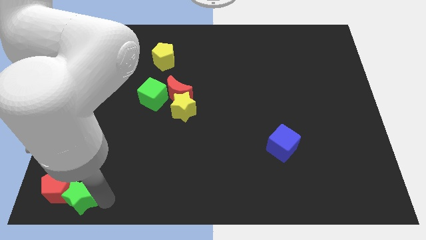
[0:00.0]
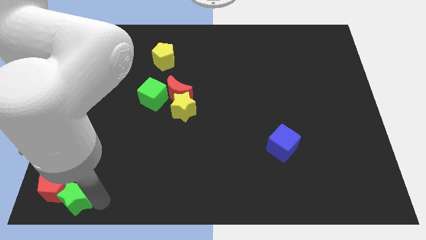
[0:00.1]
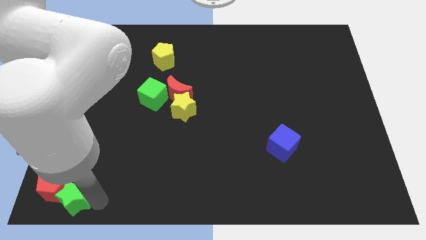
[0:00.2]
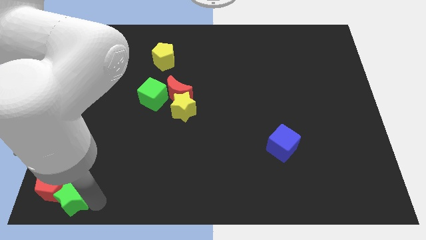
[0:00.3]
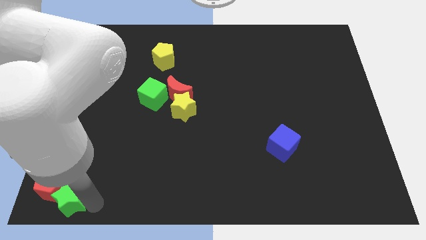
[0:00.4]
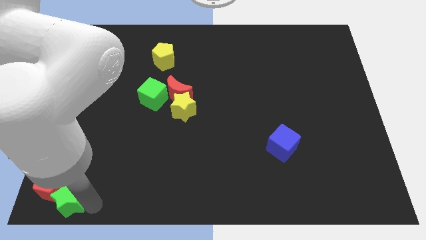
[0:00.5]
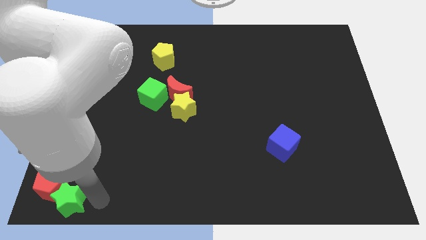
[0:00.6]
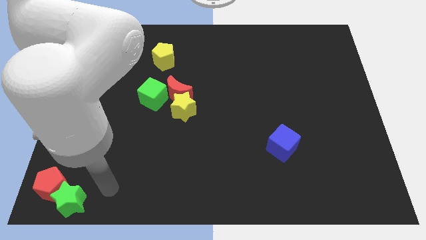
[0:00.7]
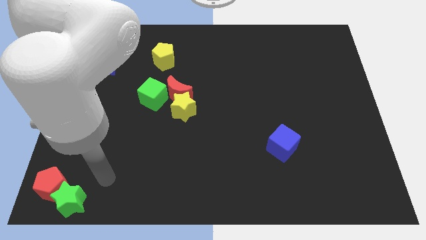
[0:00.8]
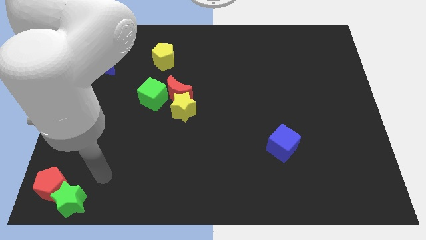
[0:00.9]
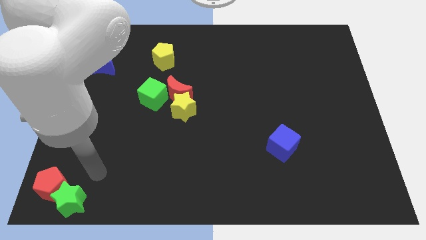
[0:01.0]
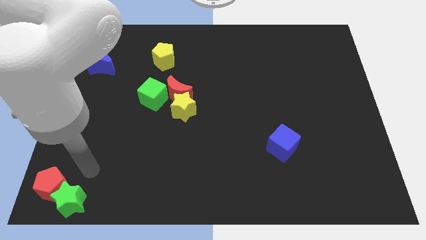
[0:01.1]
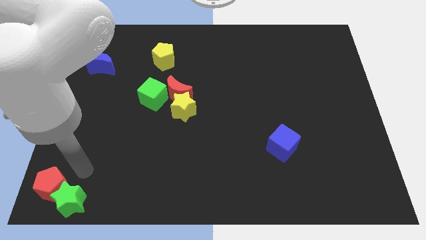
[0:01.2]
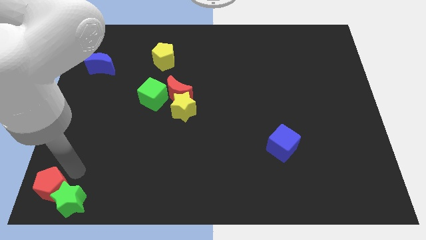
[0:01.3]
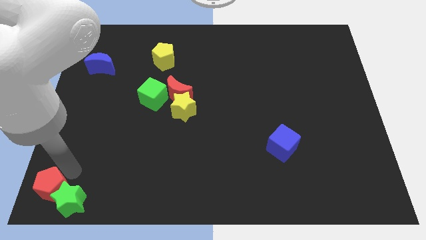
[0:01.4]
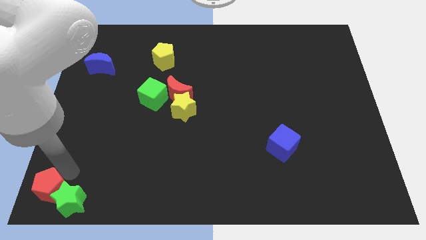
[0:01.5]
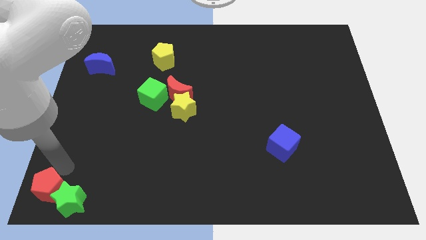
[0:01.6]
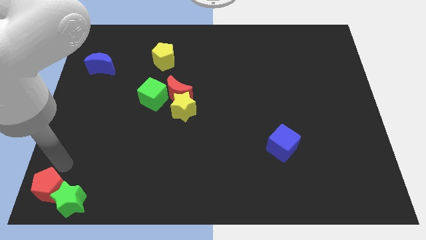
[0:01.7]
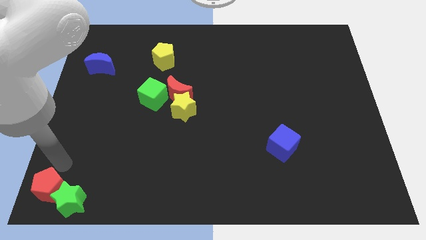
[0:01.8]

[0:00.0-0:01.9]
push the green star with red pentagon to the bottom left of the board

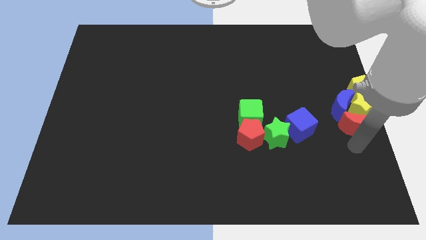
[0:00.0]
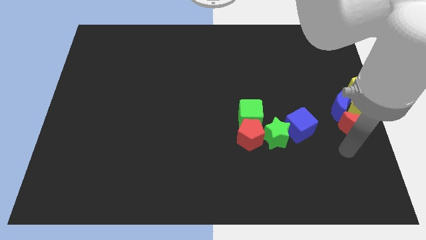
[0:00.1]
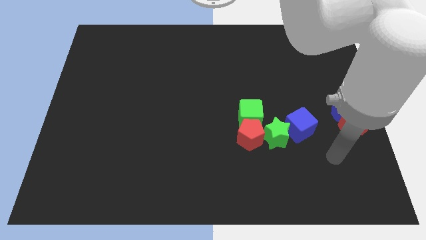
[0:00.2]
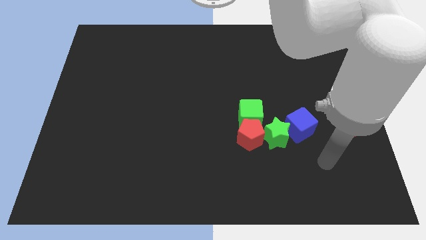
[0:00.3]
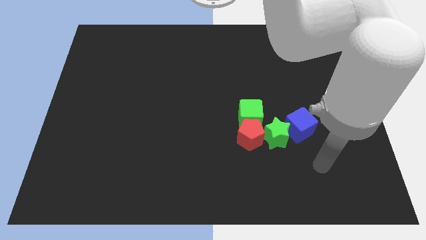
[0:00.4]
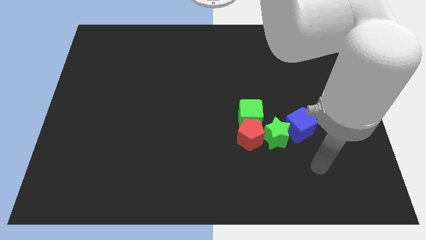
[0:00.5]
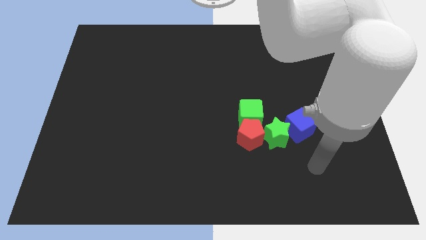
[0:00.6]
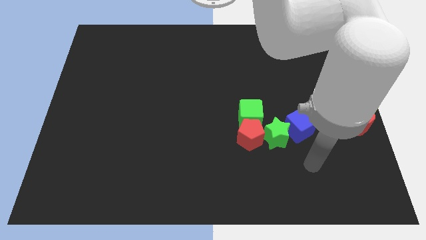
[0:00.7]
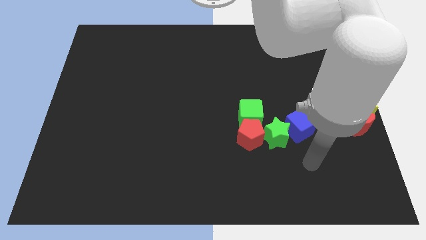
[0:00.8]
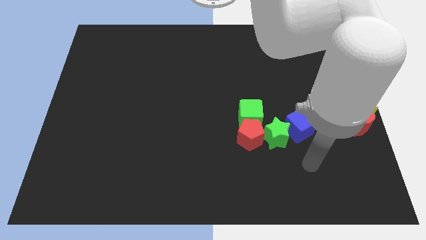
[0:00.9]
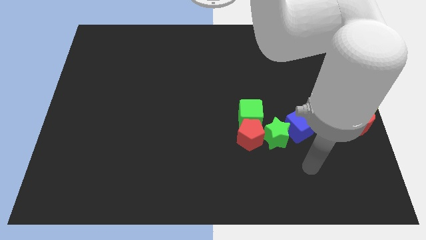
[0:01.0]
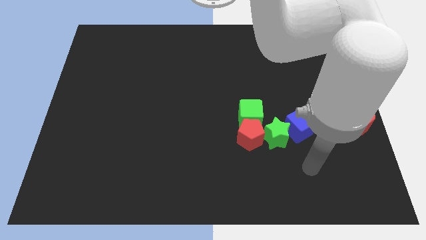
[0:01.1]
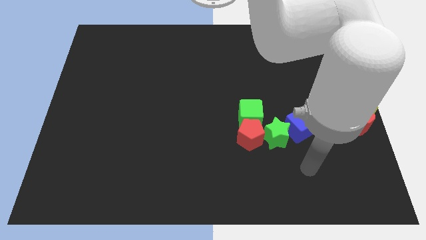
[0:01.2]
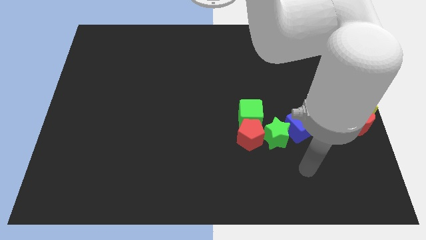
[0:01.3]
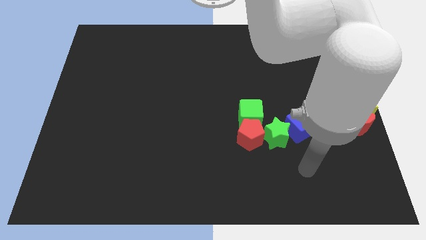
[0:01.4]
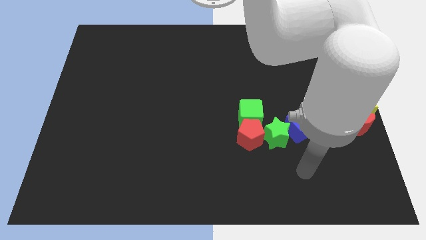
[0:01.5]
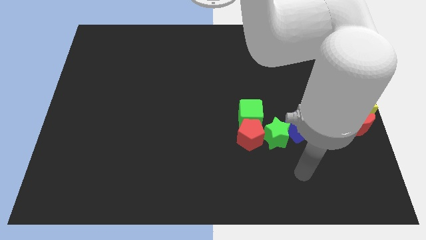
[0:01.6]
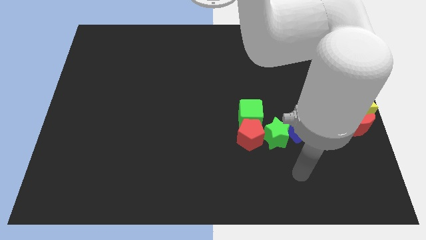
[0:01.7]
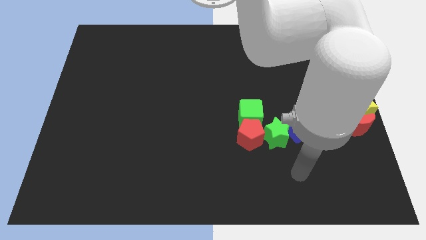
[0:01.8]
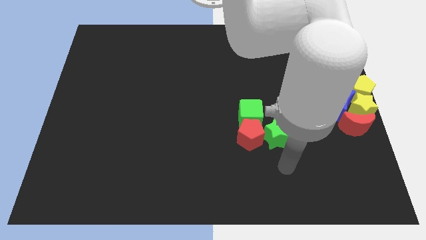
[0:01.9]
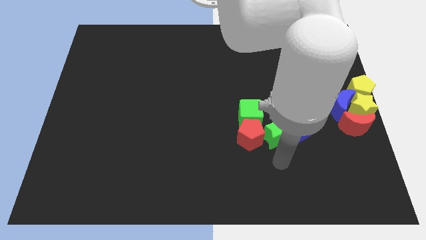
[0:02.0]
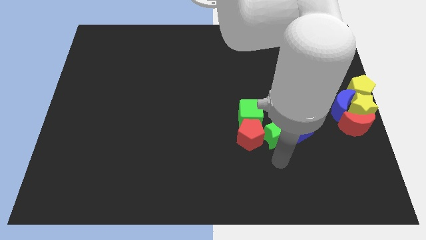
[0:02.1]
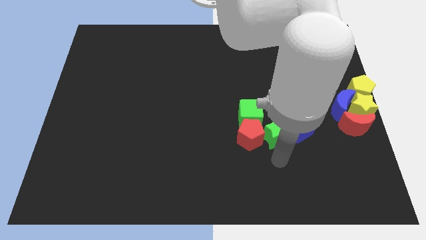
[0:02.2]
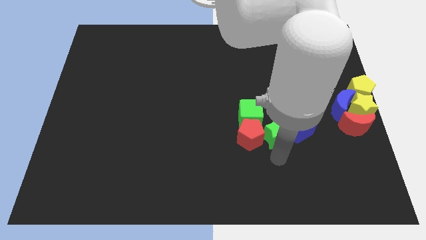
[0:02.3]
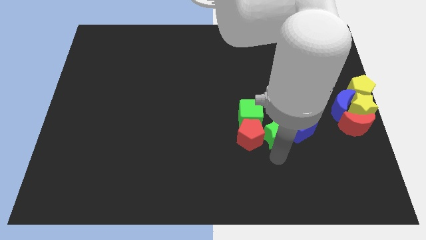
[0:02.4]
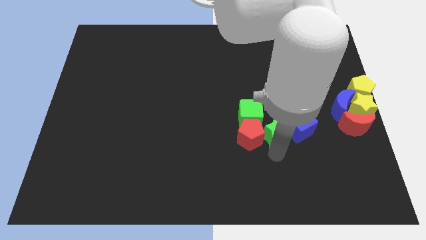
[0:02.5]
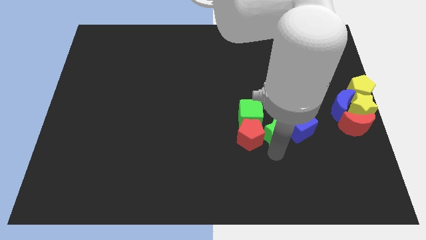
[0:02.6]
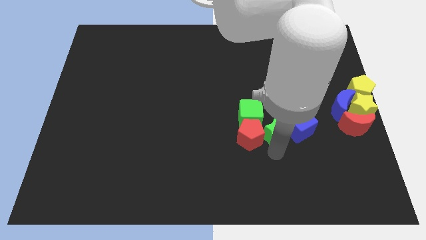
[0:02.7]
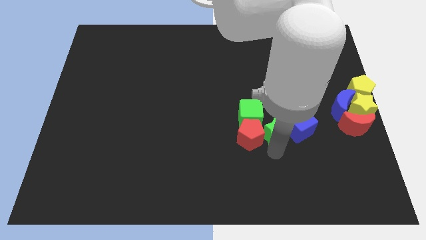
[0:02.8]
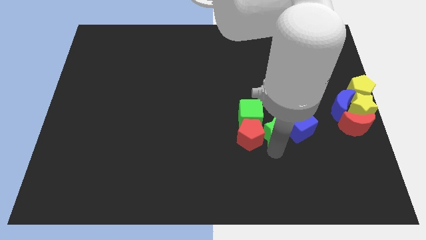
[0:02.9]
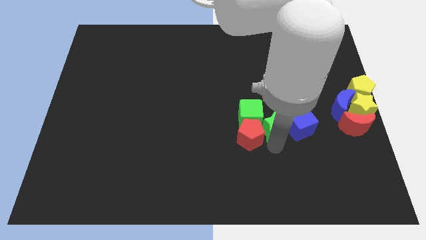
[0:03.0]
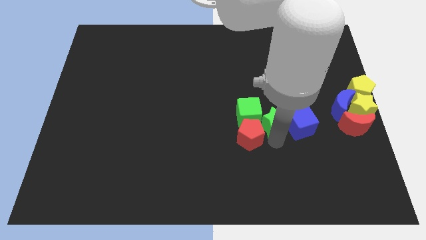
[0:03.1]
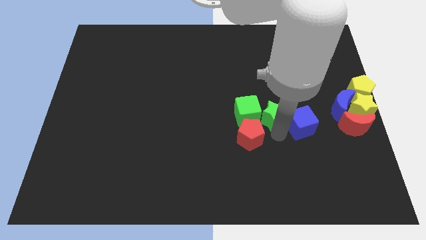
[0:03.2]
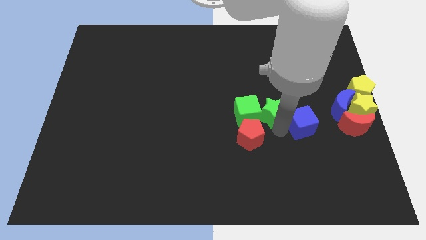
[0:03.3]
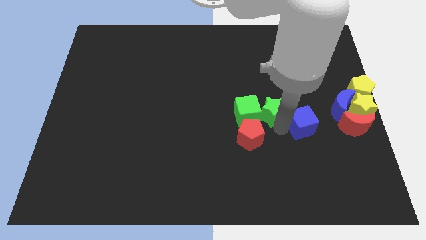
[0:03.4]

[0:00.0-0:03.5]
move the green star into the right side of the green cube

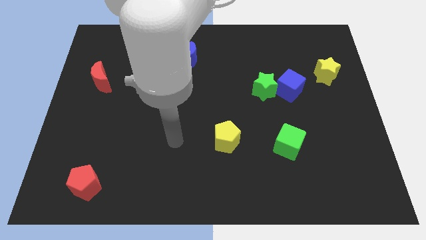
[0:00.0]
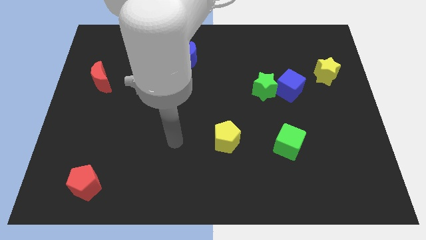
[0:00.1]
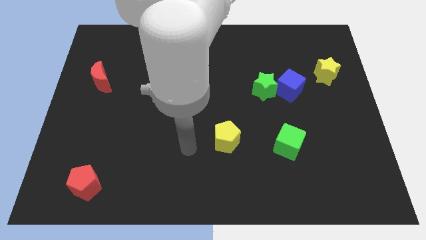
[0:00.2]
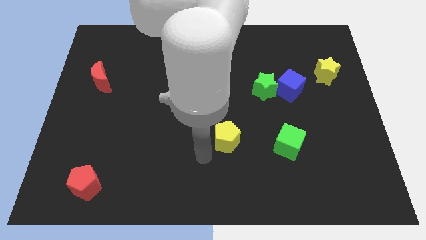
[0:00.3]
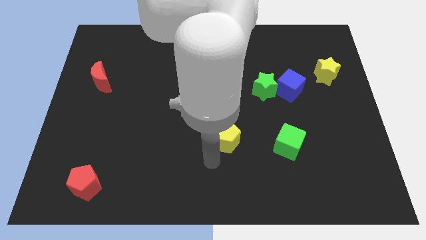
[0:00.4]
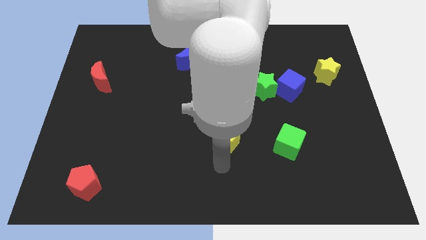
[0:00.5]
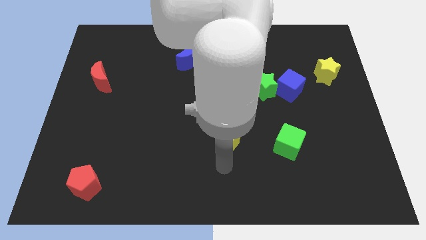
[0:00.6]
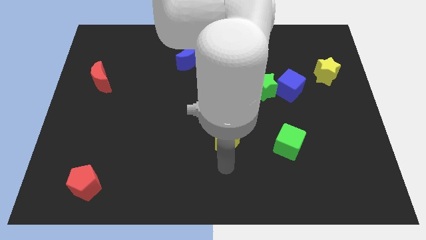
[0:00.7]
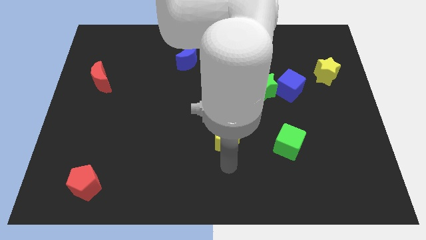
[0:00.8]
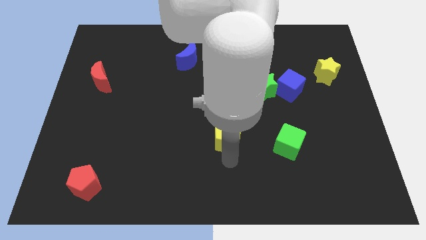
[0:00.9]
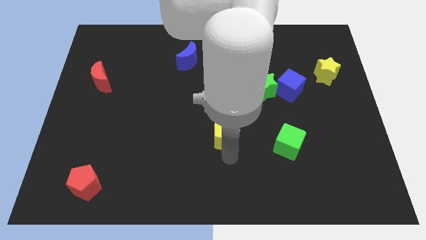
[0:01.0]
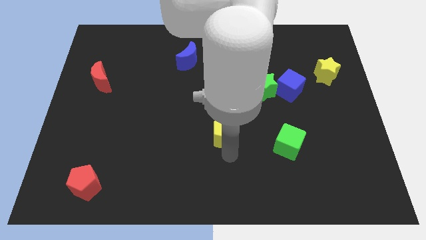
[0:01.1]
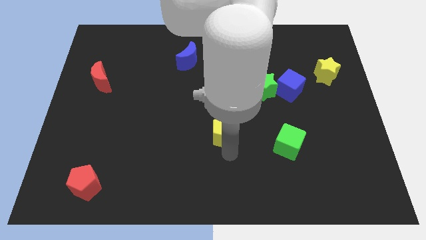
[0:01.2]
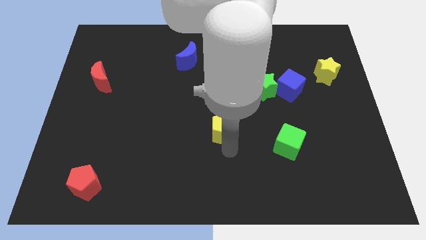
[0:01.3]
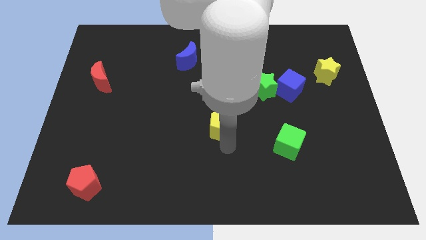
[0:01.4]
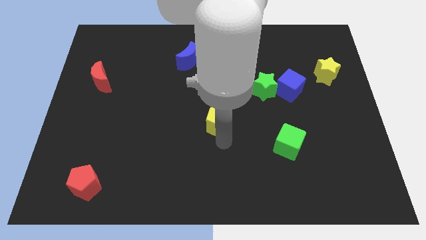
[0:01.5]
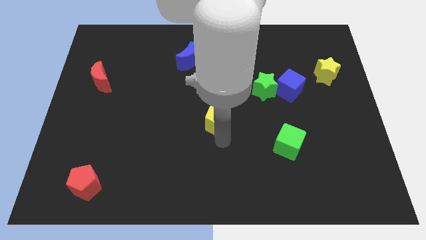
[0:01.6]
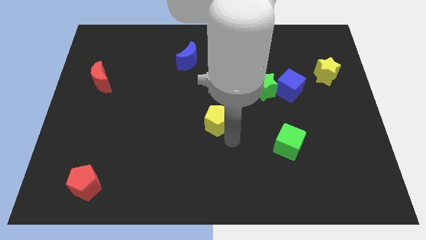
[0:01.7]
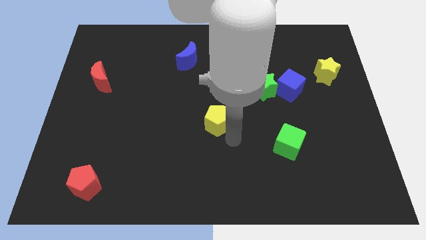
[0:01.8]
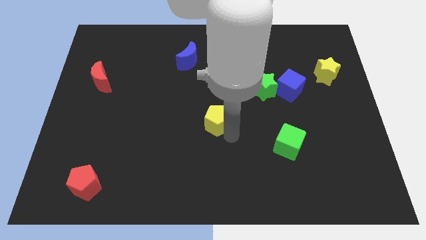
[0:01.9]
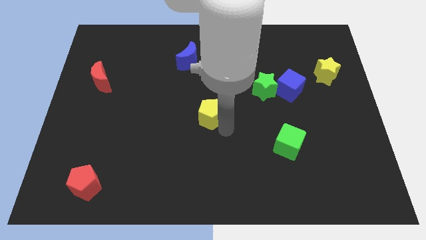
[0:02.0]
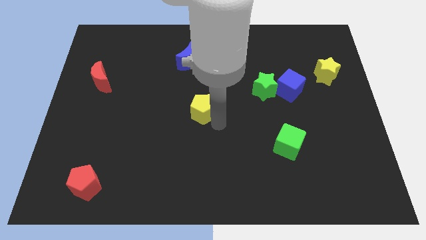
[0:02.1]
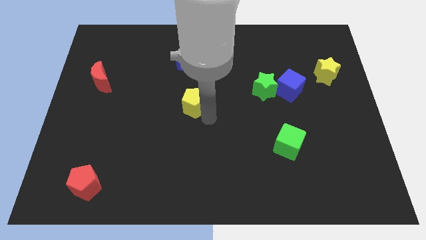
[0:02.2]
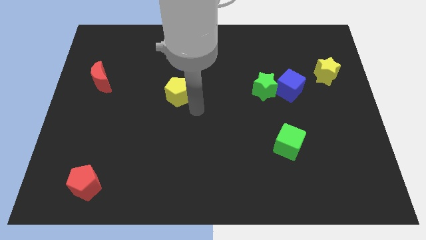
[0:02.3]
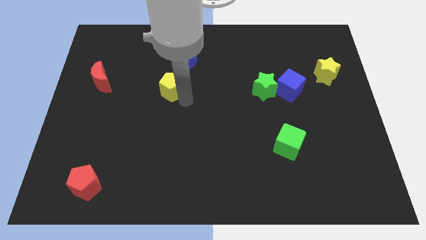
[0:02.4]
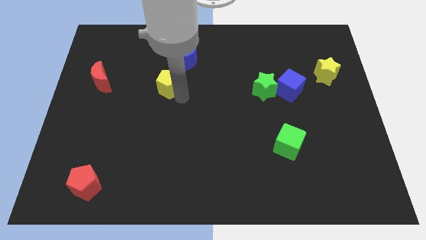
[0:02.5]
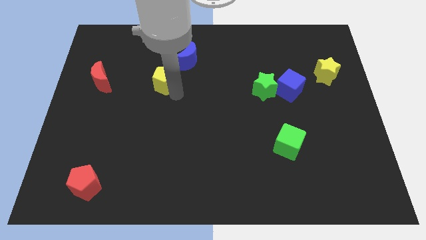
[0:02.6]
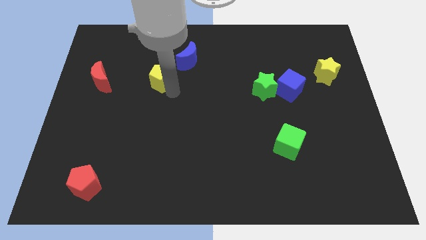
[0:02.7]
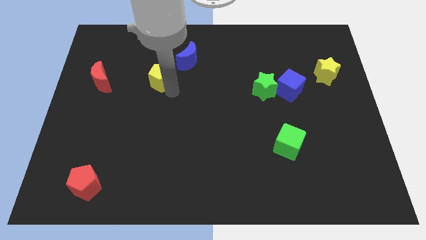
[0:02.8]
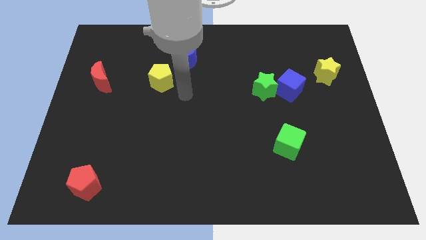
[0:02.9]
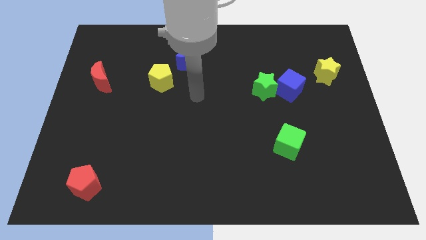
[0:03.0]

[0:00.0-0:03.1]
move yellow pentagon near blue moon

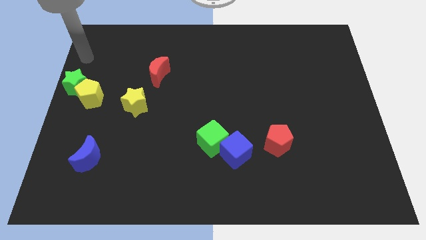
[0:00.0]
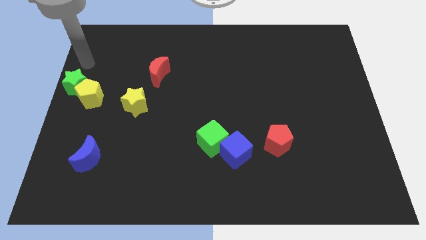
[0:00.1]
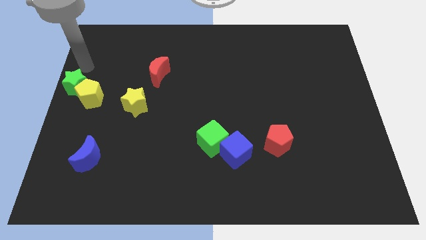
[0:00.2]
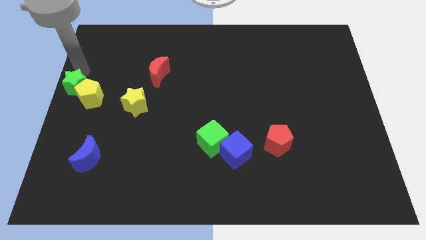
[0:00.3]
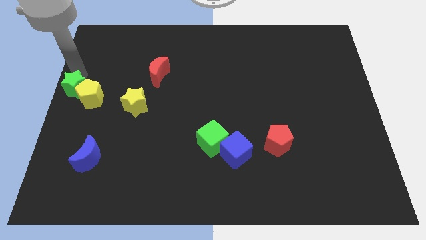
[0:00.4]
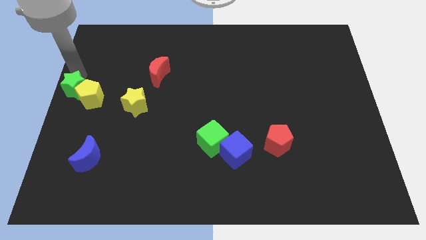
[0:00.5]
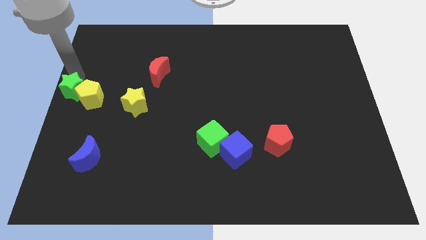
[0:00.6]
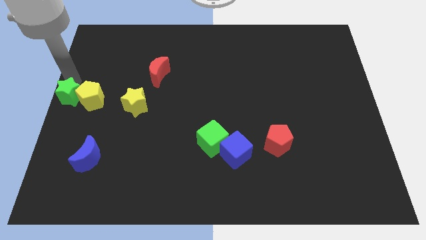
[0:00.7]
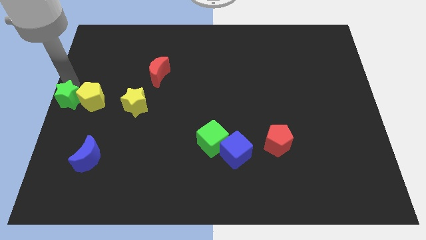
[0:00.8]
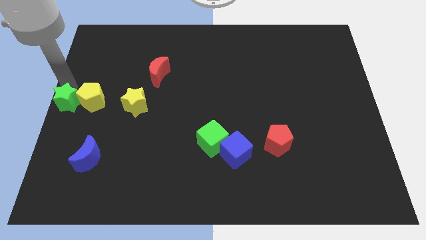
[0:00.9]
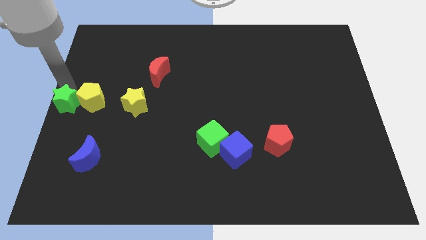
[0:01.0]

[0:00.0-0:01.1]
move green star on the center left corner of the board
